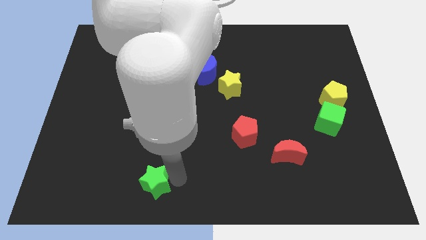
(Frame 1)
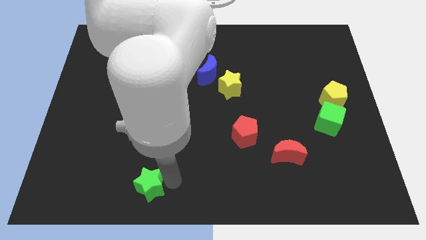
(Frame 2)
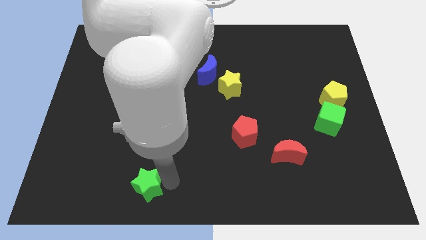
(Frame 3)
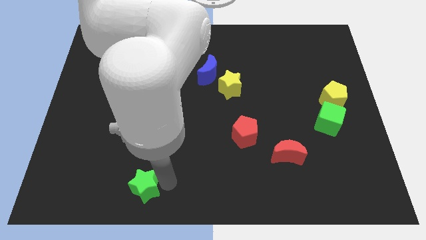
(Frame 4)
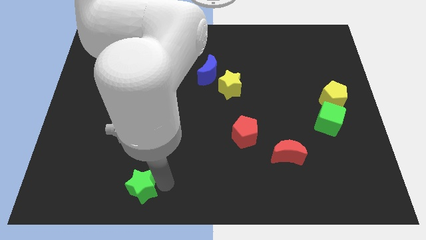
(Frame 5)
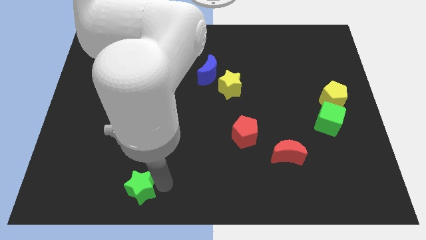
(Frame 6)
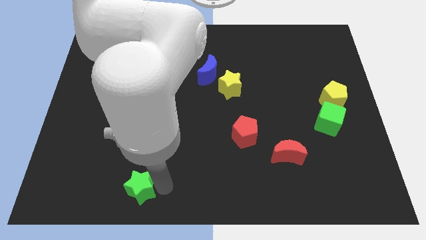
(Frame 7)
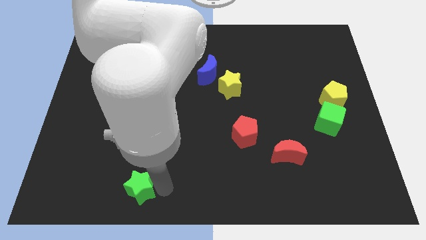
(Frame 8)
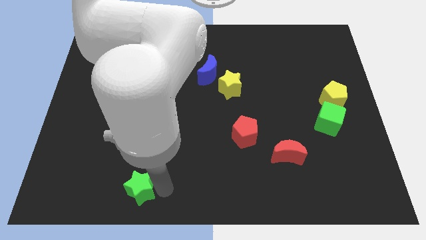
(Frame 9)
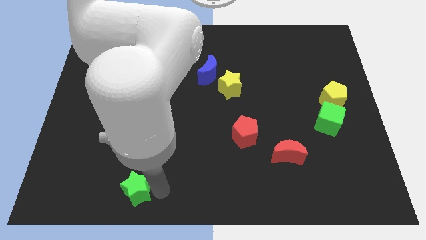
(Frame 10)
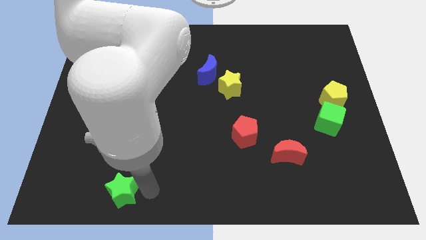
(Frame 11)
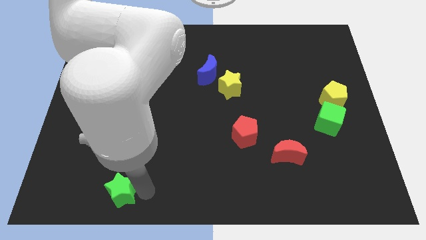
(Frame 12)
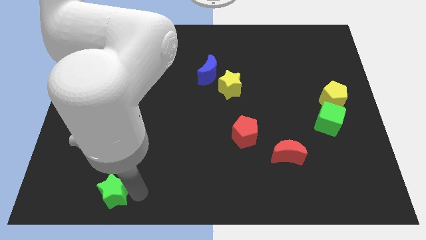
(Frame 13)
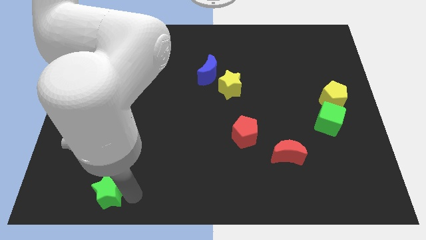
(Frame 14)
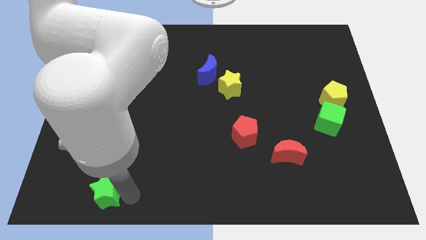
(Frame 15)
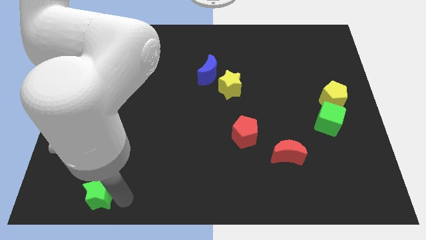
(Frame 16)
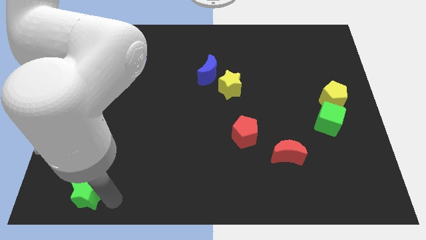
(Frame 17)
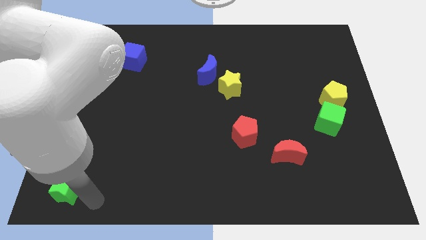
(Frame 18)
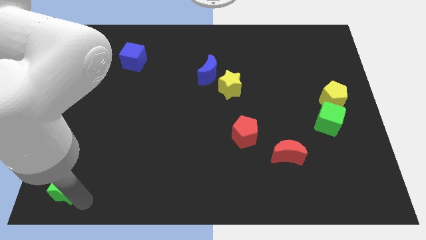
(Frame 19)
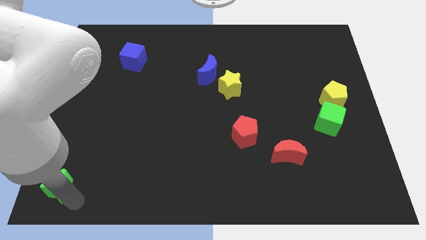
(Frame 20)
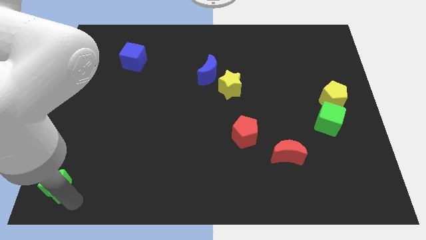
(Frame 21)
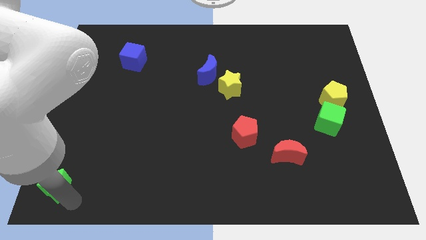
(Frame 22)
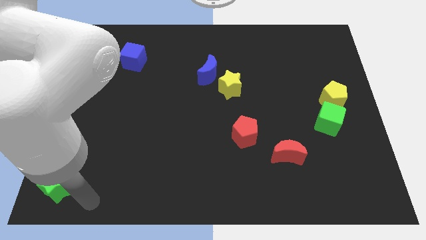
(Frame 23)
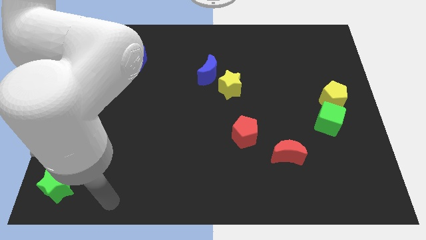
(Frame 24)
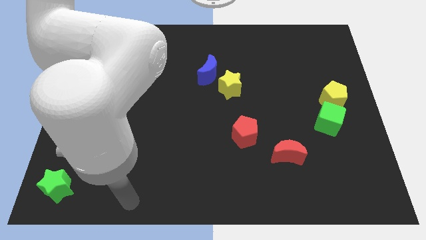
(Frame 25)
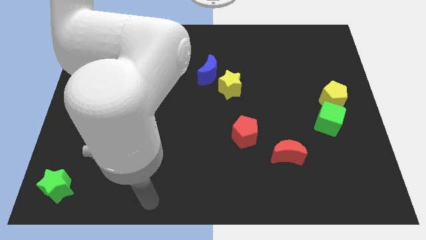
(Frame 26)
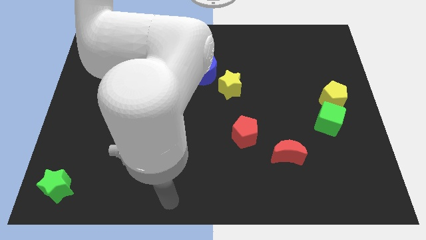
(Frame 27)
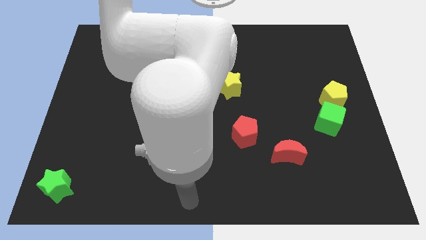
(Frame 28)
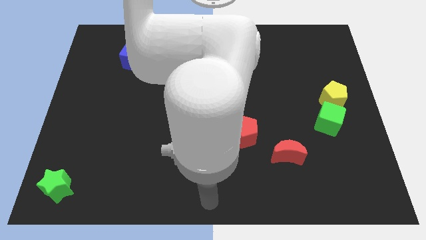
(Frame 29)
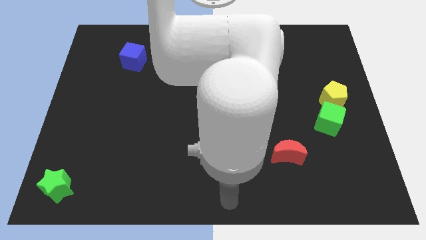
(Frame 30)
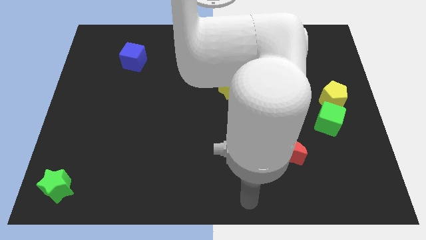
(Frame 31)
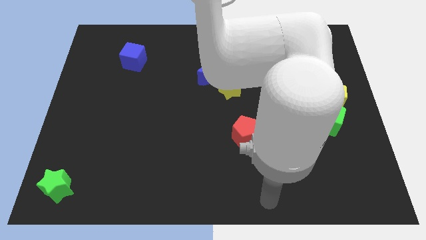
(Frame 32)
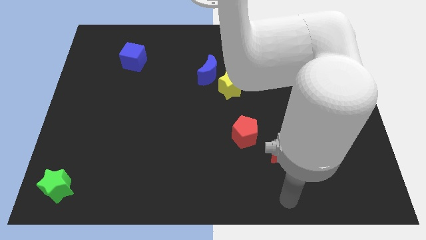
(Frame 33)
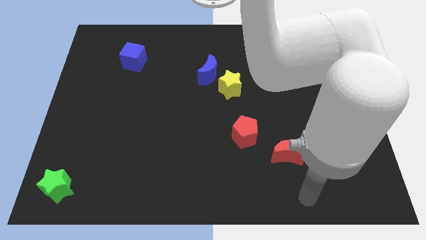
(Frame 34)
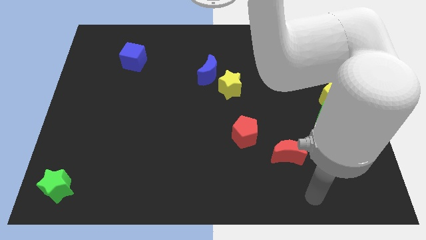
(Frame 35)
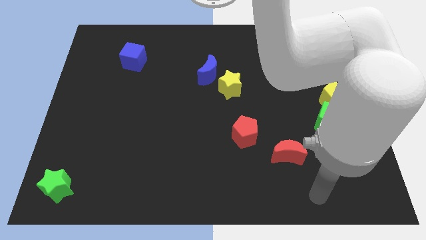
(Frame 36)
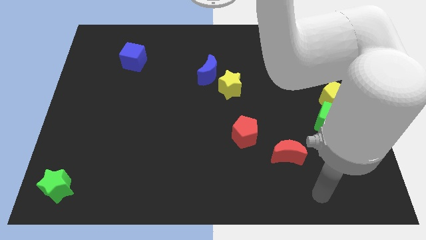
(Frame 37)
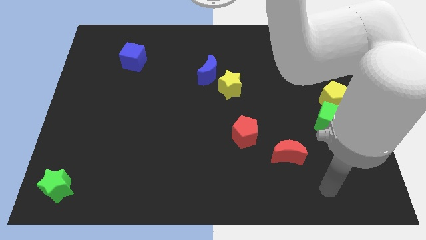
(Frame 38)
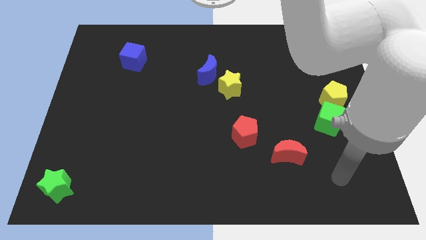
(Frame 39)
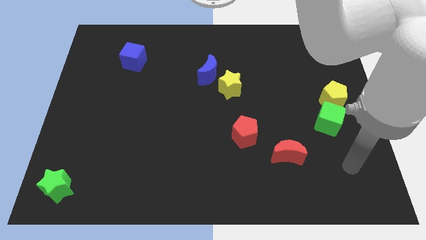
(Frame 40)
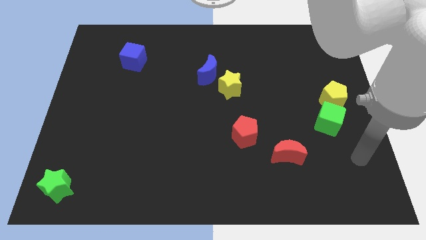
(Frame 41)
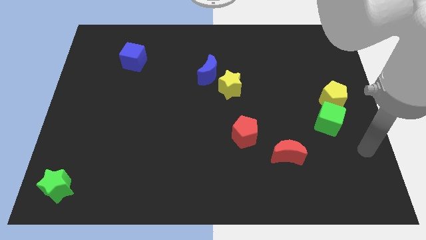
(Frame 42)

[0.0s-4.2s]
push the green star to the bottom left corner of the board

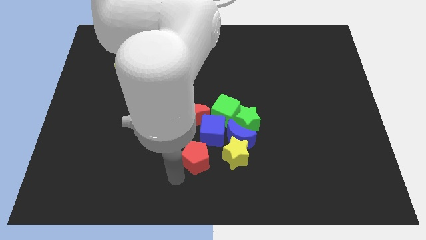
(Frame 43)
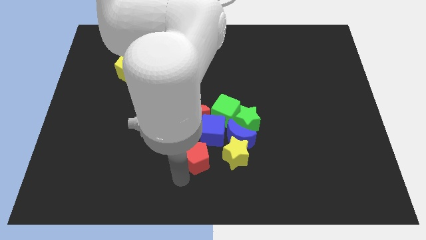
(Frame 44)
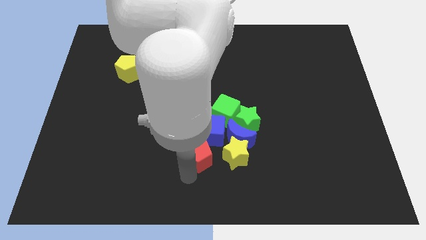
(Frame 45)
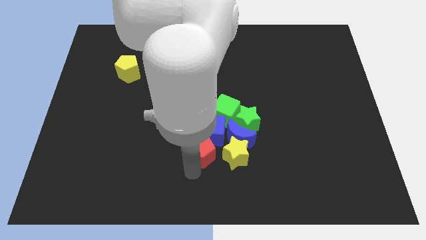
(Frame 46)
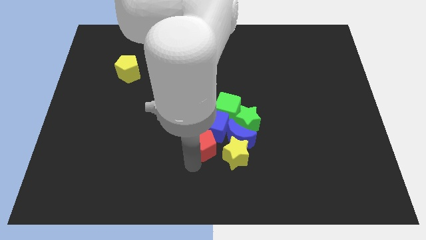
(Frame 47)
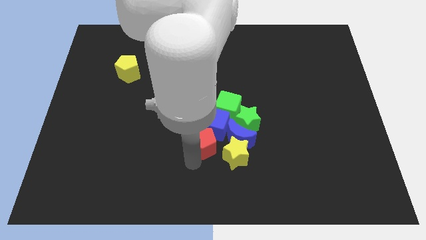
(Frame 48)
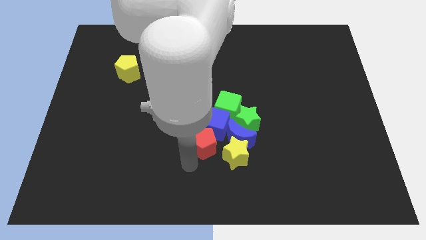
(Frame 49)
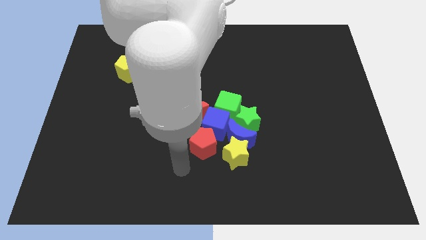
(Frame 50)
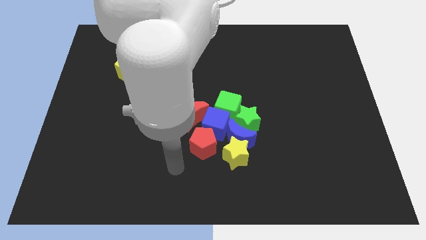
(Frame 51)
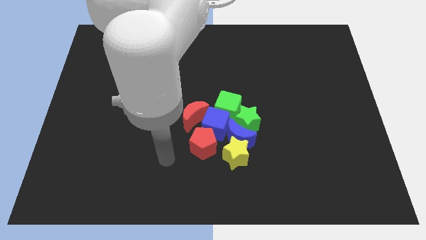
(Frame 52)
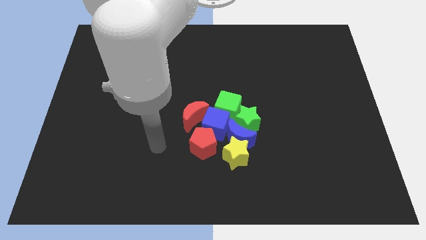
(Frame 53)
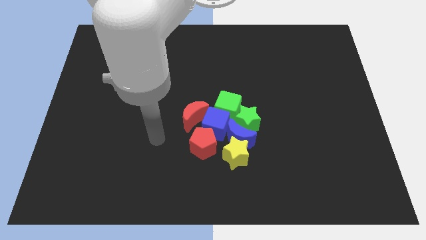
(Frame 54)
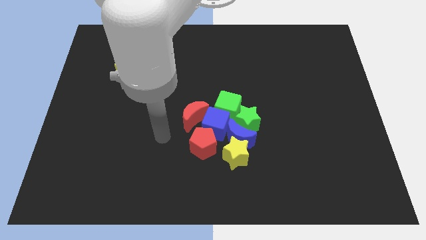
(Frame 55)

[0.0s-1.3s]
place the red pentagon below the blue cube

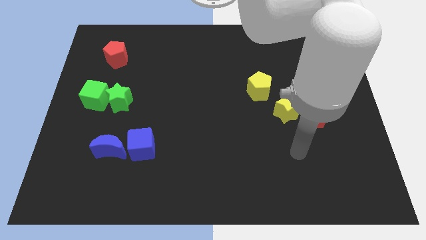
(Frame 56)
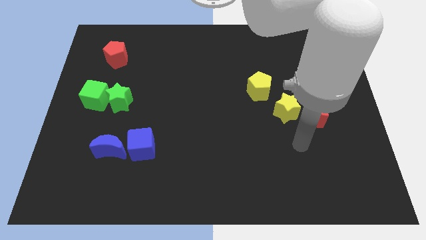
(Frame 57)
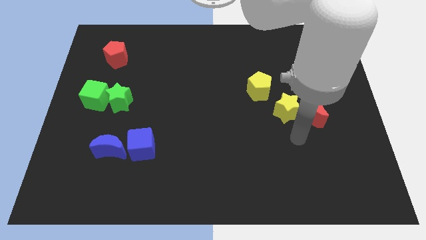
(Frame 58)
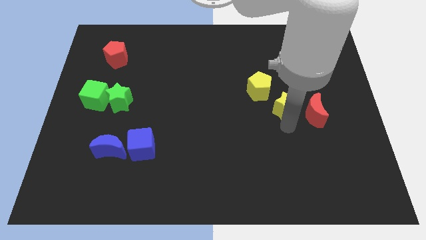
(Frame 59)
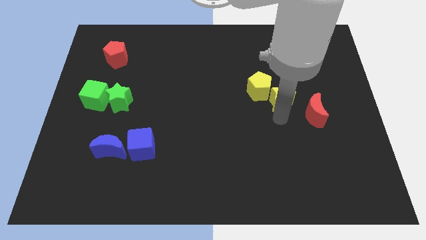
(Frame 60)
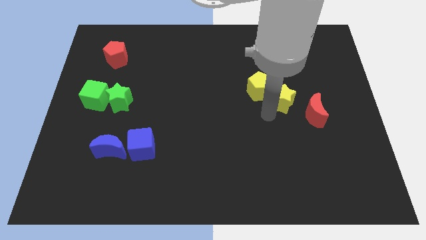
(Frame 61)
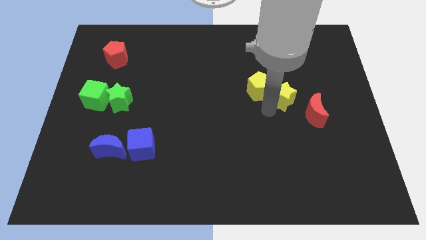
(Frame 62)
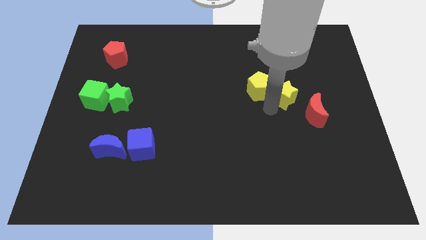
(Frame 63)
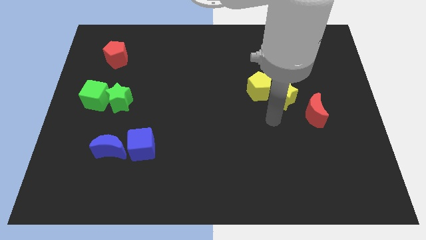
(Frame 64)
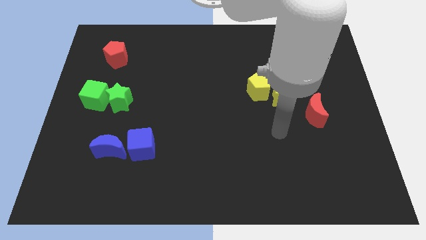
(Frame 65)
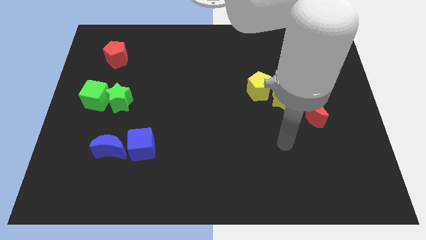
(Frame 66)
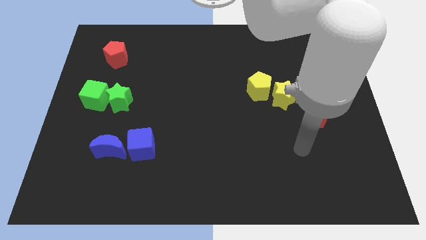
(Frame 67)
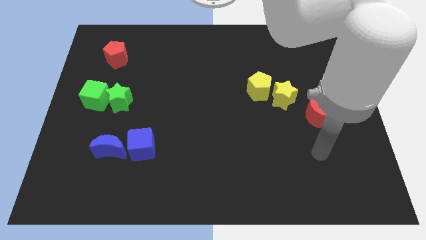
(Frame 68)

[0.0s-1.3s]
place the yellow star right to the yellow pentagon

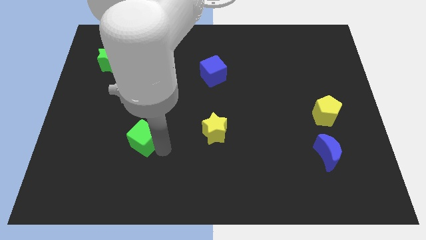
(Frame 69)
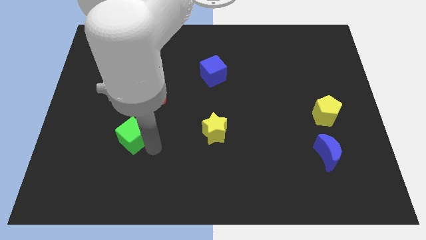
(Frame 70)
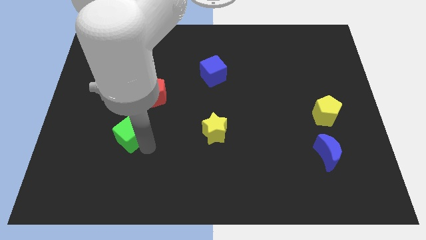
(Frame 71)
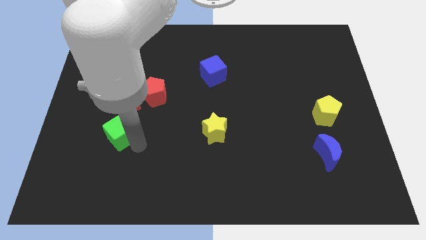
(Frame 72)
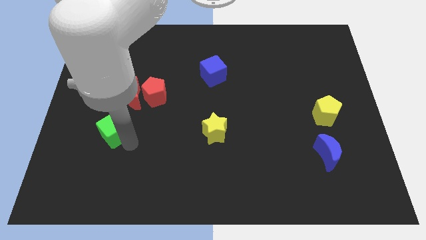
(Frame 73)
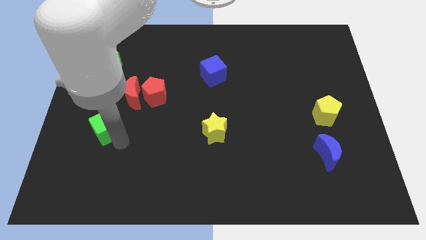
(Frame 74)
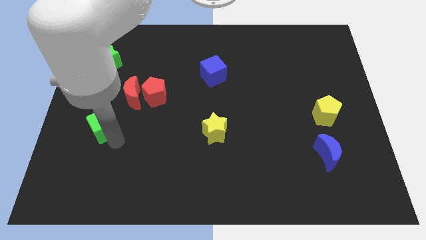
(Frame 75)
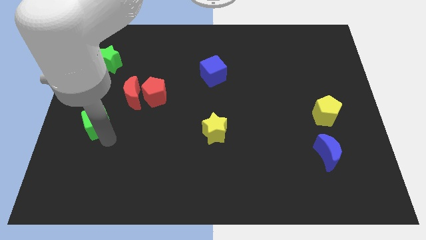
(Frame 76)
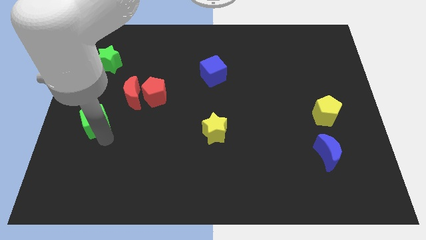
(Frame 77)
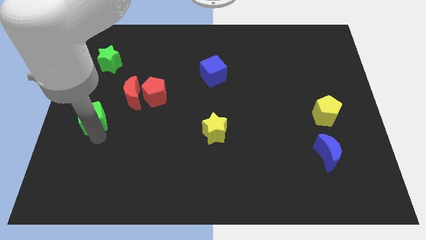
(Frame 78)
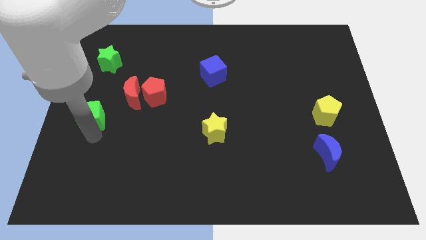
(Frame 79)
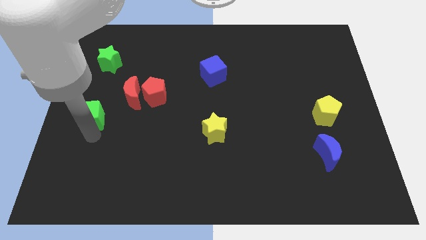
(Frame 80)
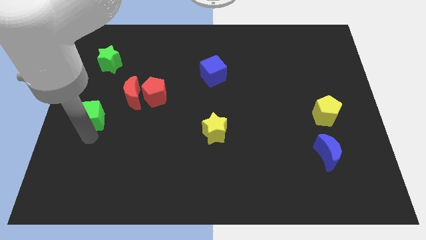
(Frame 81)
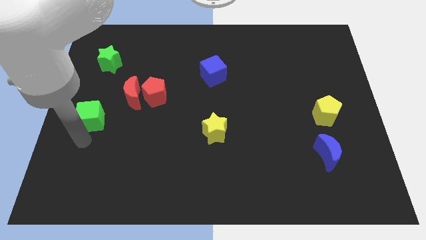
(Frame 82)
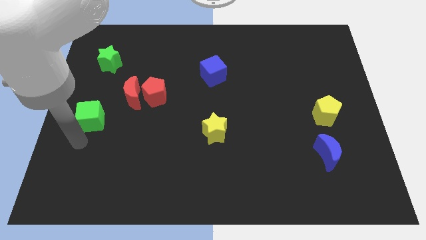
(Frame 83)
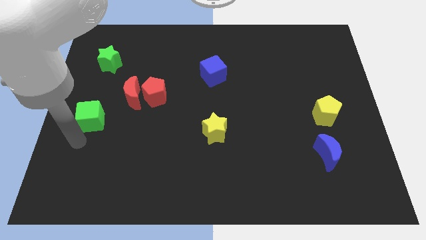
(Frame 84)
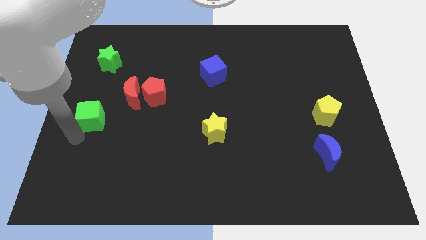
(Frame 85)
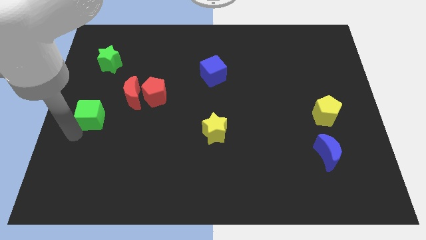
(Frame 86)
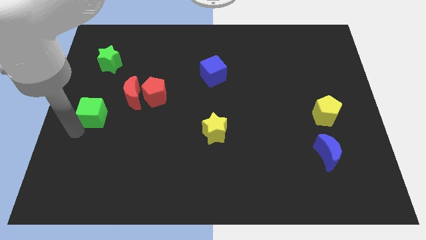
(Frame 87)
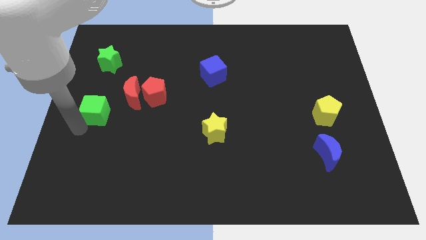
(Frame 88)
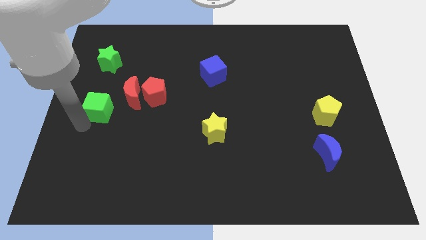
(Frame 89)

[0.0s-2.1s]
place the green cube vertical to the green star
